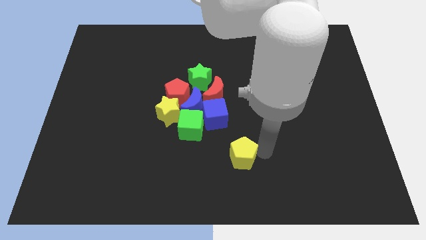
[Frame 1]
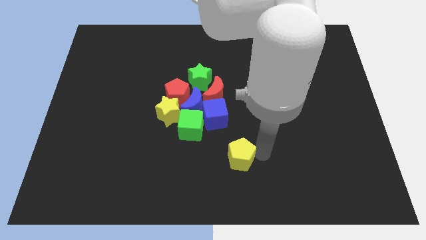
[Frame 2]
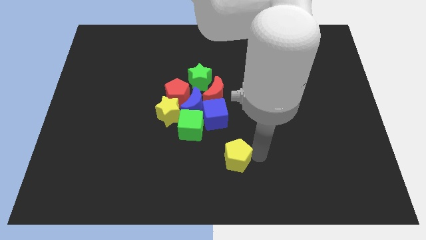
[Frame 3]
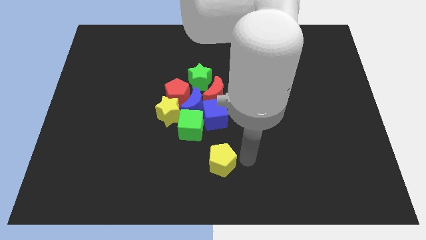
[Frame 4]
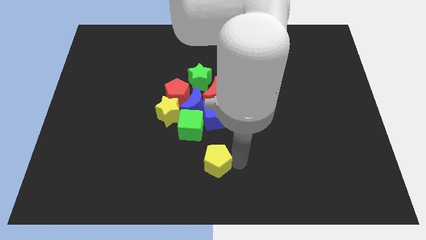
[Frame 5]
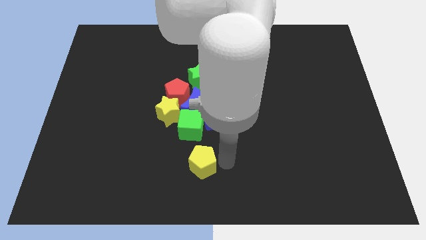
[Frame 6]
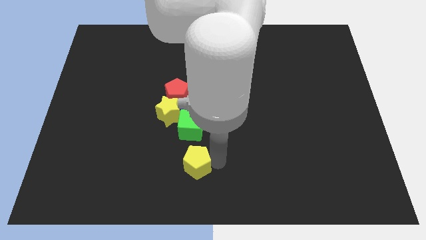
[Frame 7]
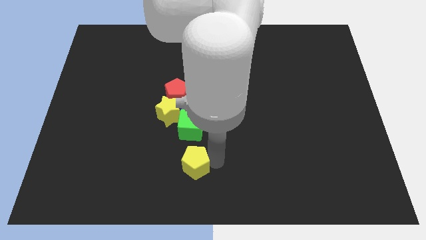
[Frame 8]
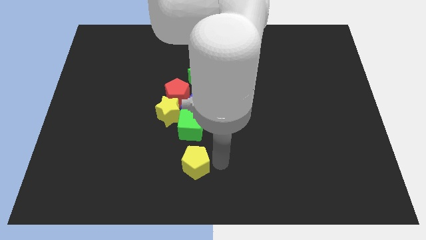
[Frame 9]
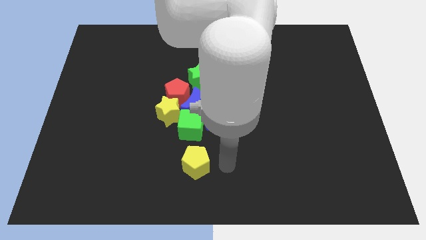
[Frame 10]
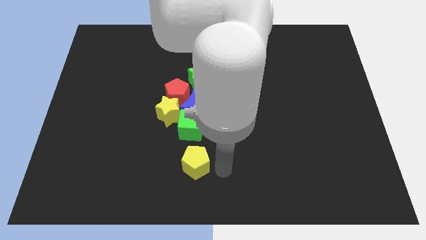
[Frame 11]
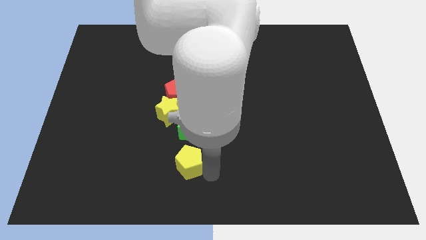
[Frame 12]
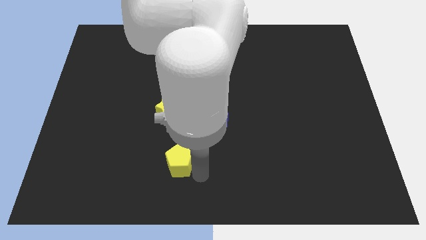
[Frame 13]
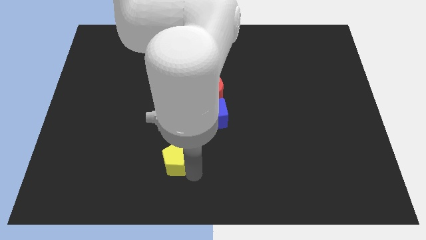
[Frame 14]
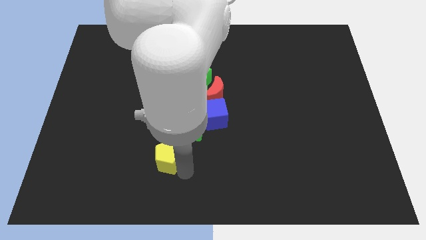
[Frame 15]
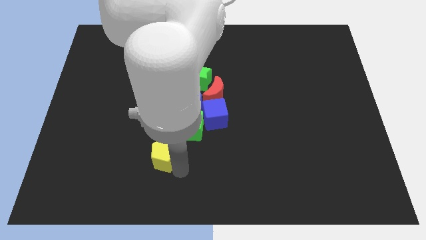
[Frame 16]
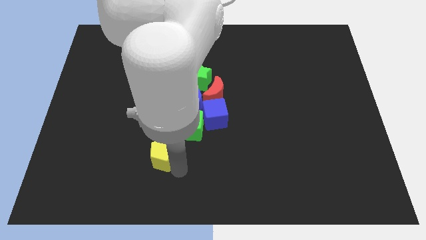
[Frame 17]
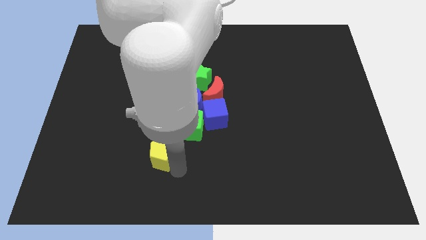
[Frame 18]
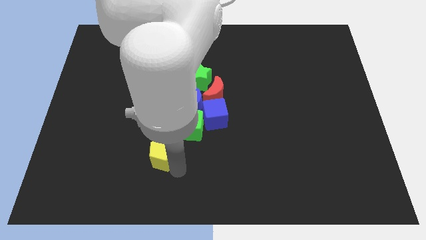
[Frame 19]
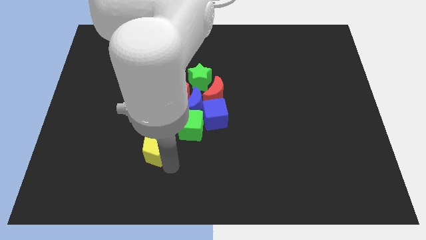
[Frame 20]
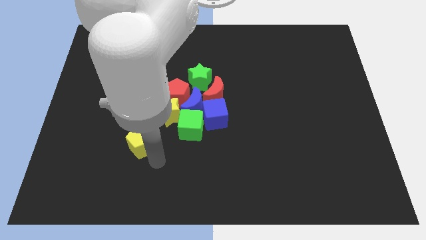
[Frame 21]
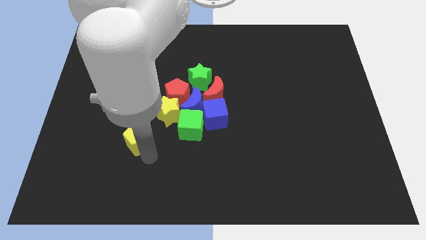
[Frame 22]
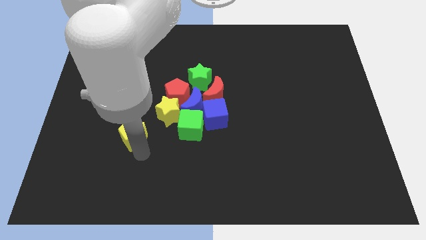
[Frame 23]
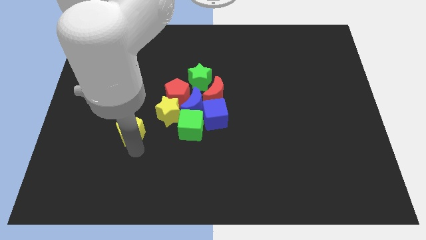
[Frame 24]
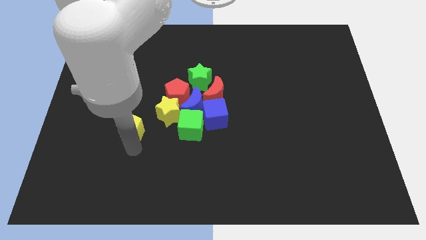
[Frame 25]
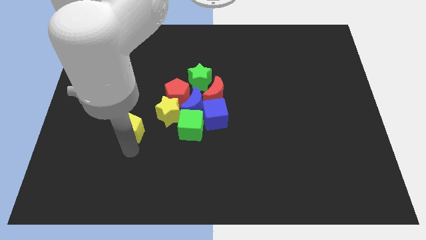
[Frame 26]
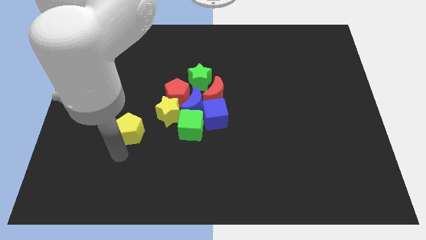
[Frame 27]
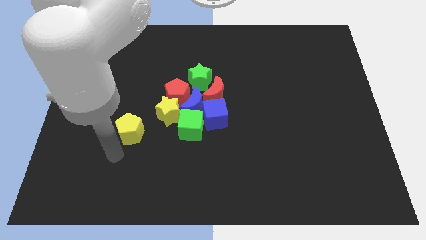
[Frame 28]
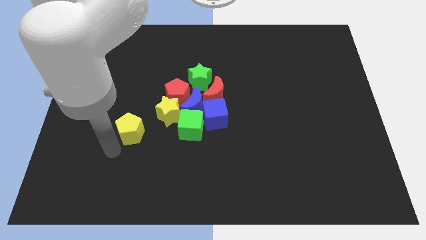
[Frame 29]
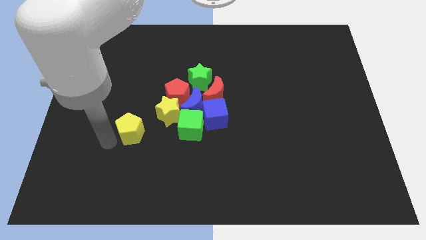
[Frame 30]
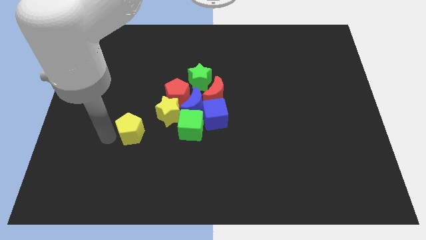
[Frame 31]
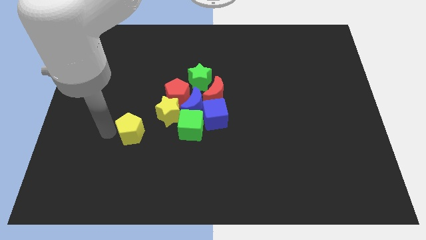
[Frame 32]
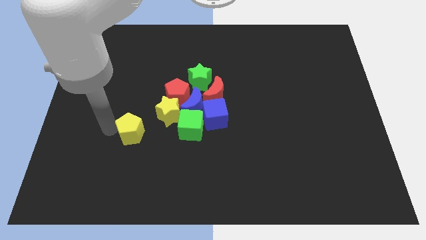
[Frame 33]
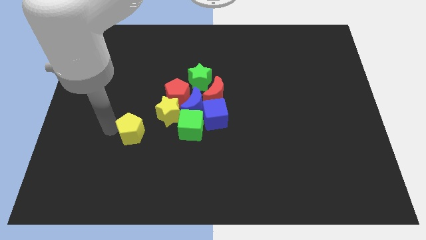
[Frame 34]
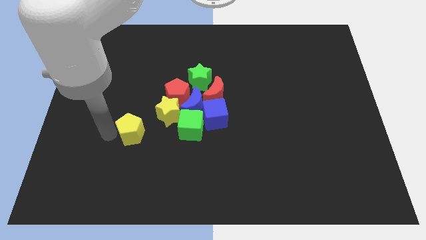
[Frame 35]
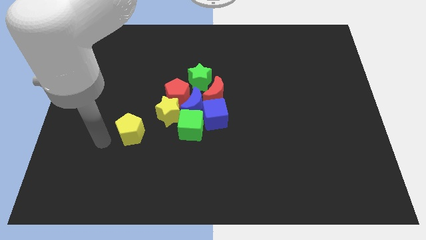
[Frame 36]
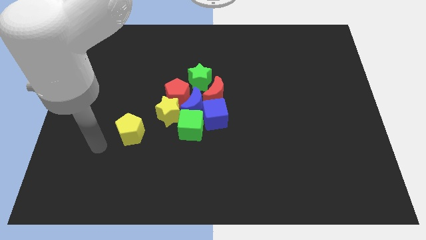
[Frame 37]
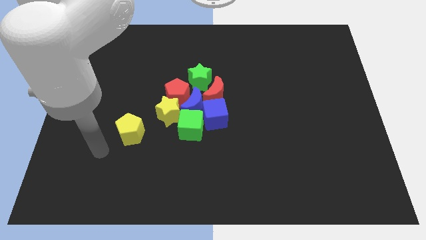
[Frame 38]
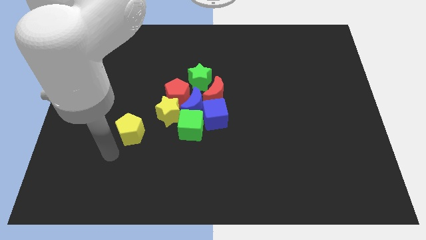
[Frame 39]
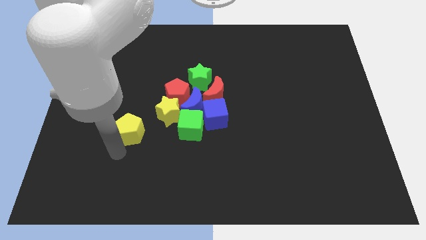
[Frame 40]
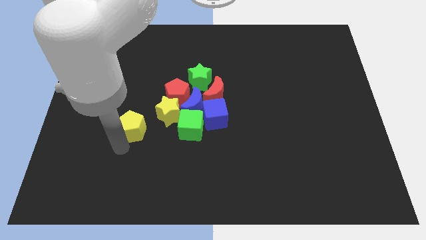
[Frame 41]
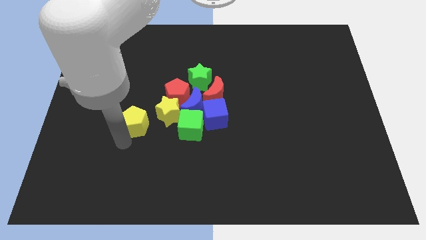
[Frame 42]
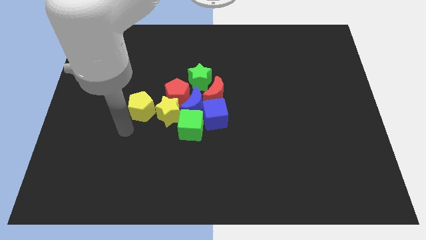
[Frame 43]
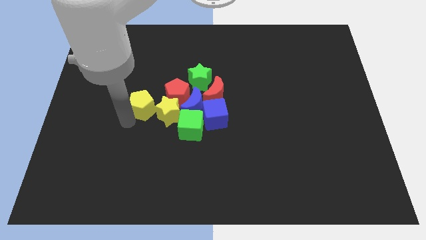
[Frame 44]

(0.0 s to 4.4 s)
push the yellow pentagon to the left of the yellow star

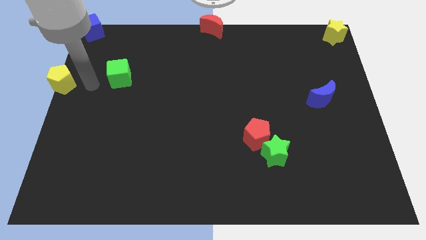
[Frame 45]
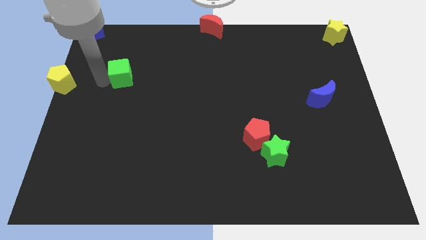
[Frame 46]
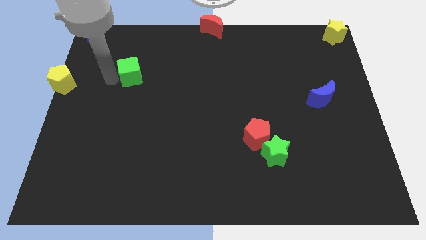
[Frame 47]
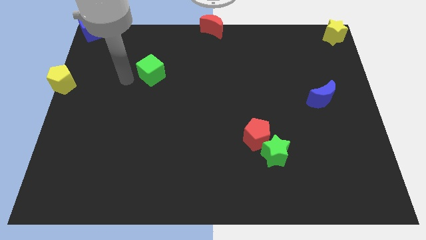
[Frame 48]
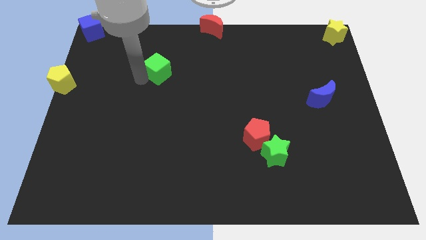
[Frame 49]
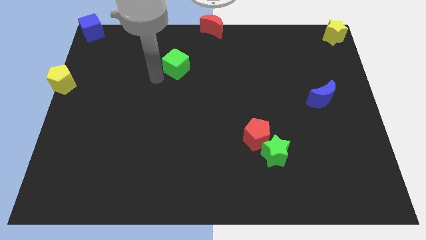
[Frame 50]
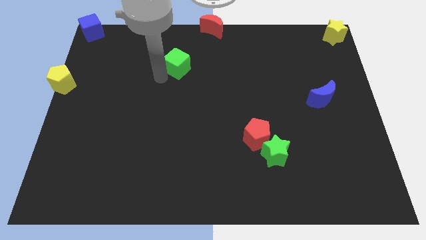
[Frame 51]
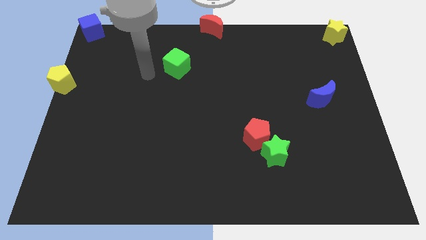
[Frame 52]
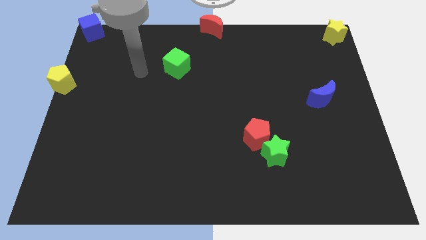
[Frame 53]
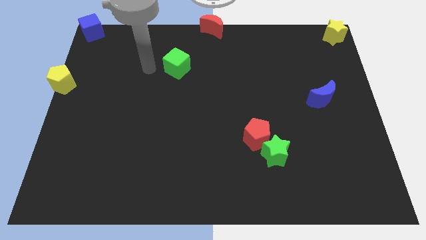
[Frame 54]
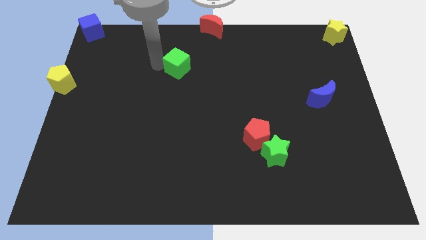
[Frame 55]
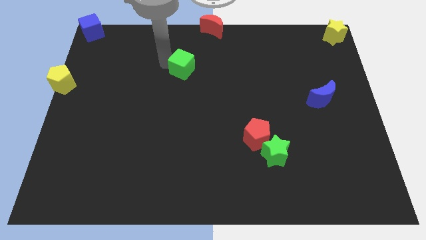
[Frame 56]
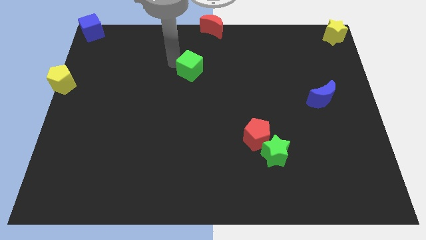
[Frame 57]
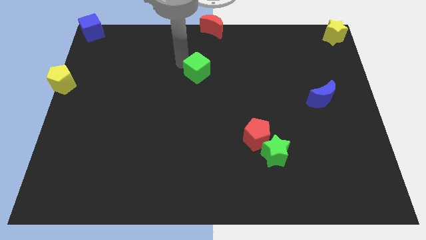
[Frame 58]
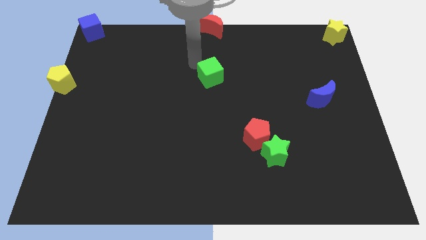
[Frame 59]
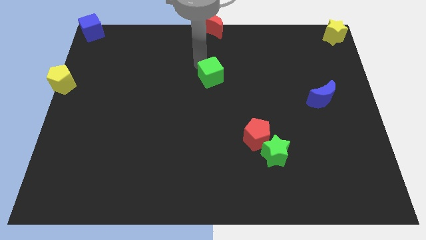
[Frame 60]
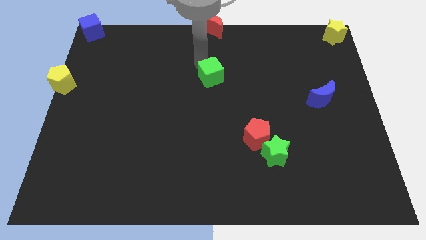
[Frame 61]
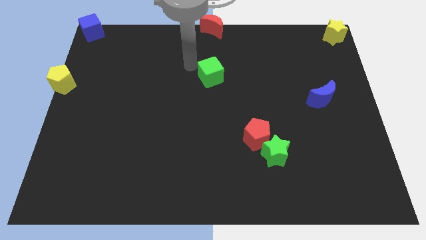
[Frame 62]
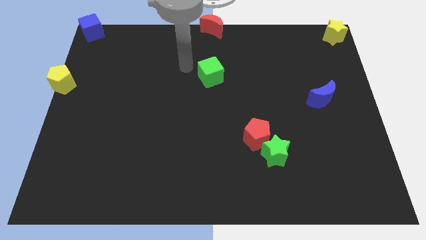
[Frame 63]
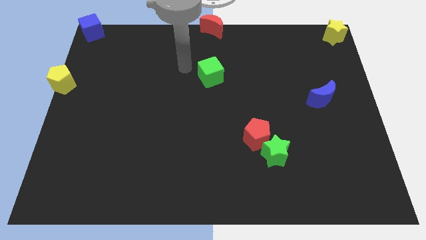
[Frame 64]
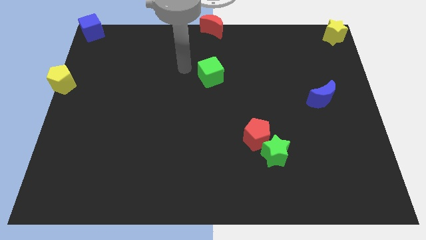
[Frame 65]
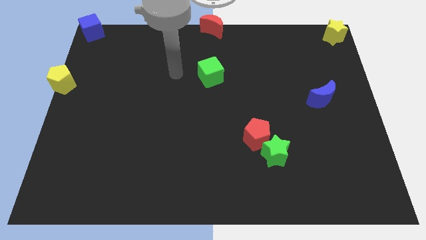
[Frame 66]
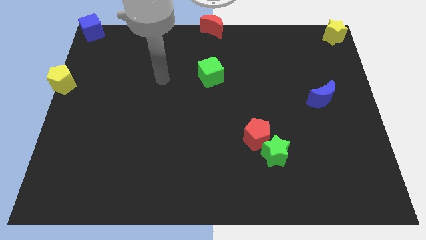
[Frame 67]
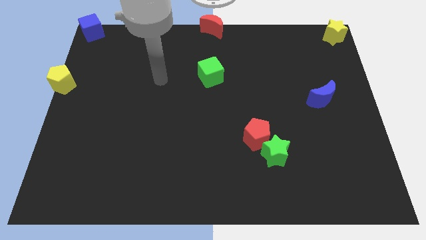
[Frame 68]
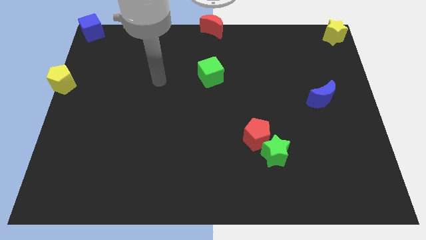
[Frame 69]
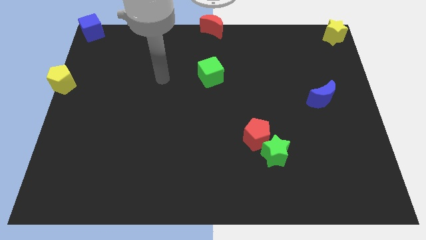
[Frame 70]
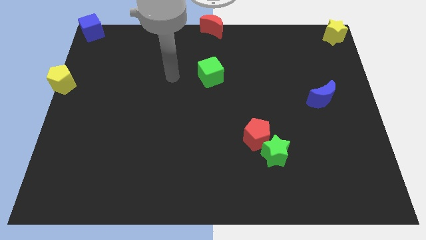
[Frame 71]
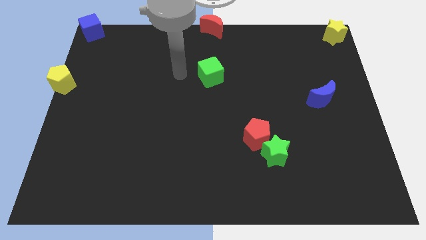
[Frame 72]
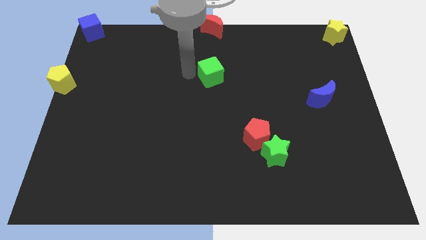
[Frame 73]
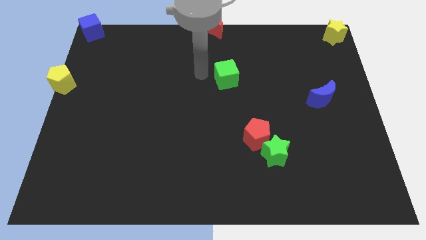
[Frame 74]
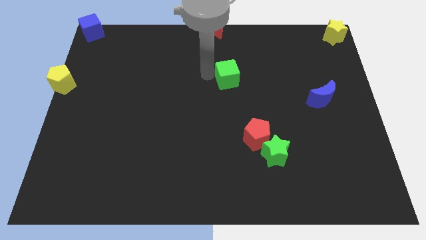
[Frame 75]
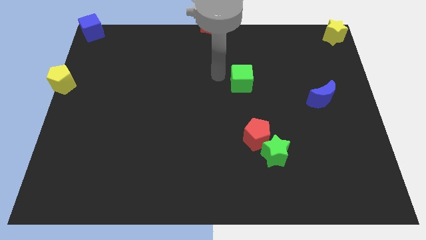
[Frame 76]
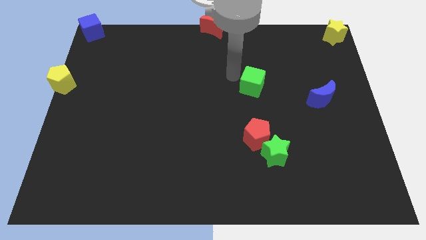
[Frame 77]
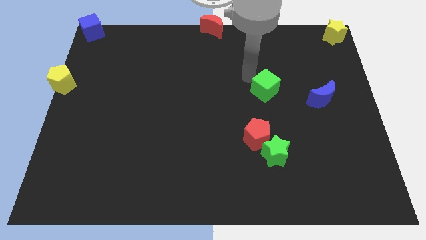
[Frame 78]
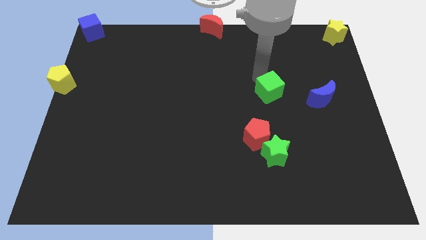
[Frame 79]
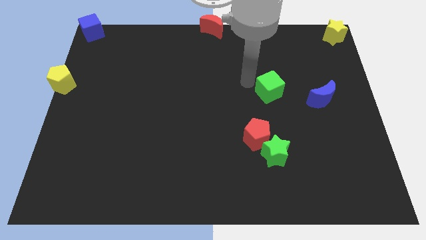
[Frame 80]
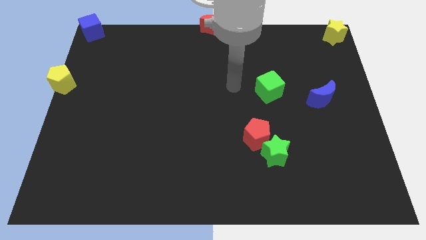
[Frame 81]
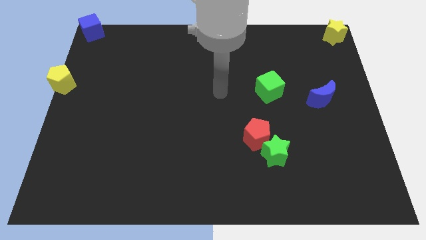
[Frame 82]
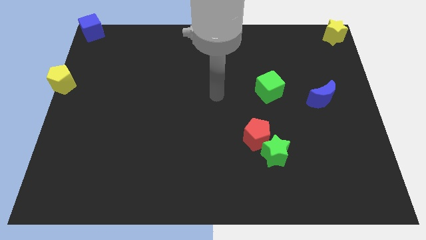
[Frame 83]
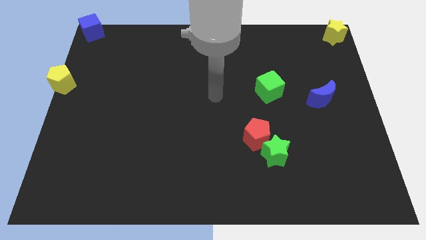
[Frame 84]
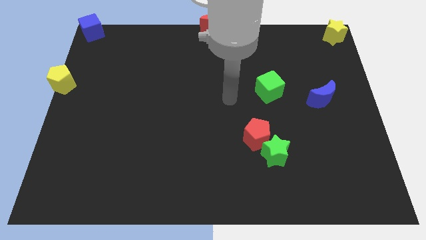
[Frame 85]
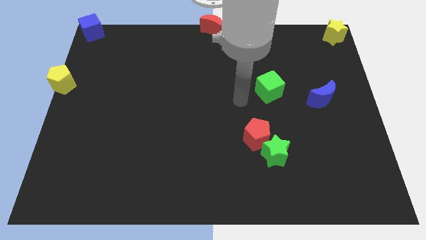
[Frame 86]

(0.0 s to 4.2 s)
put the green cube to the left of the blue crescent

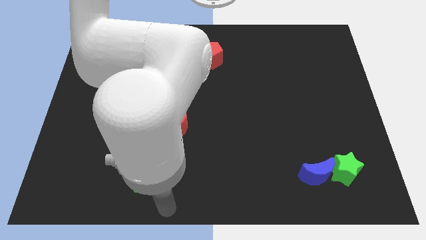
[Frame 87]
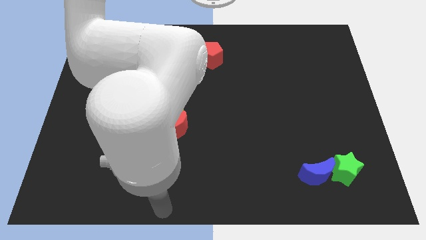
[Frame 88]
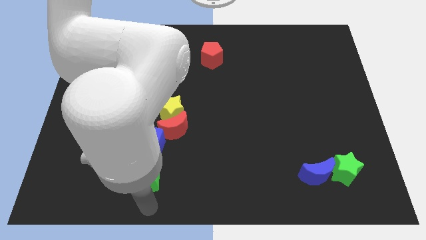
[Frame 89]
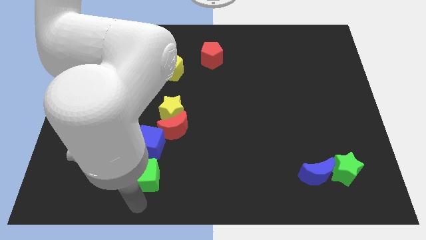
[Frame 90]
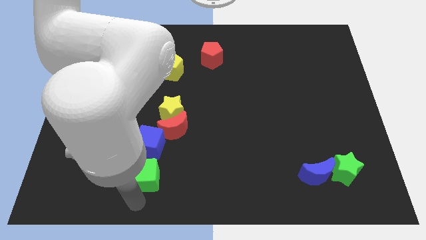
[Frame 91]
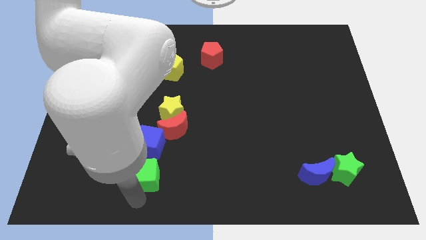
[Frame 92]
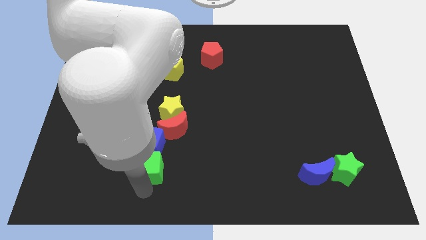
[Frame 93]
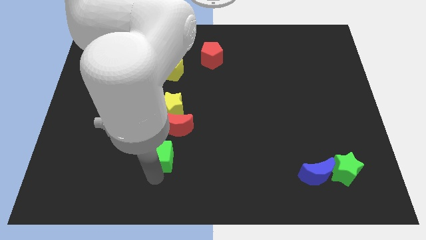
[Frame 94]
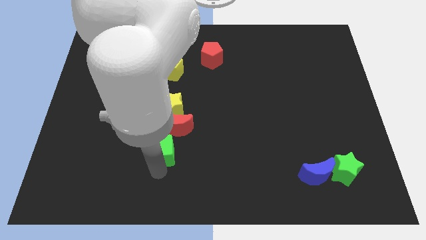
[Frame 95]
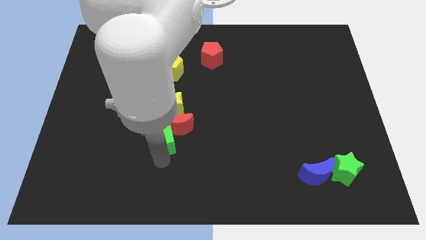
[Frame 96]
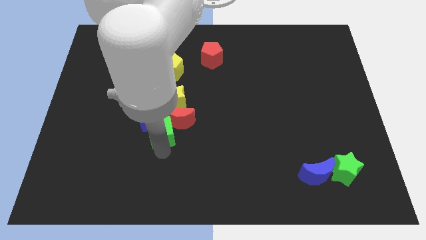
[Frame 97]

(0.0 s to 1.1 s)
push the cubes red moon and yellow star towards the top side of the board
